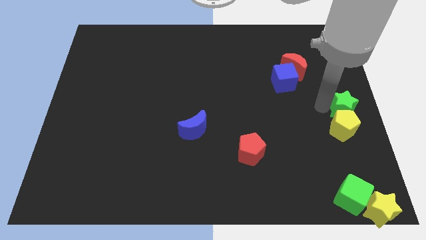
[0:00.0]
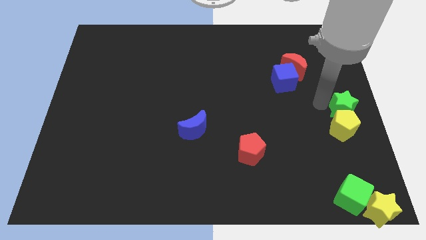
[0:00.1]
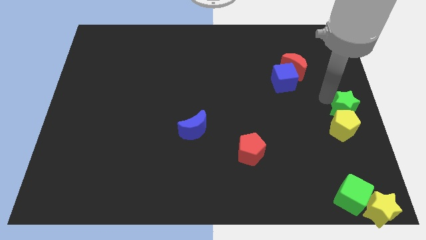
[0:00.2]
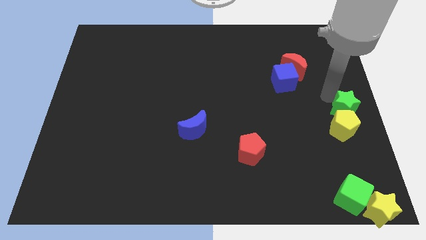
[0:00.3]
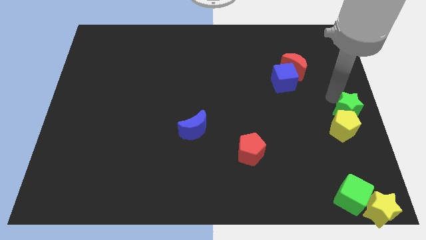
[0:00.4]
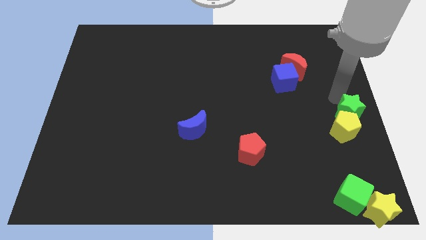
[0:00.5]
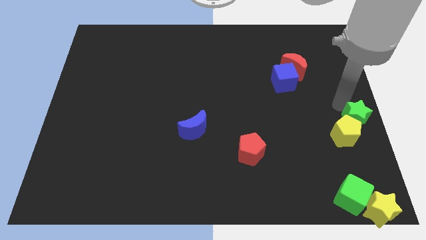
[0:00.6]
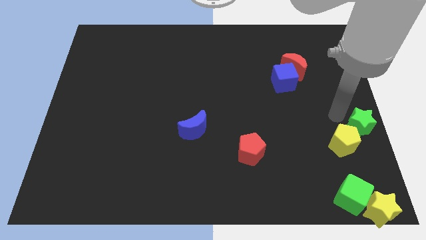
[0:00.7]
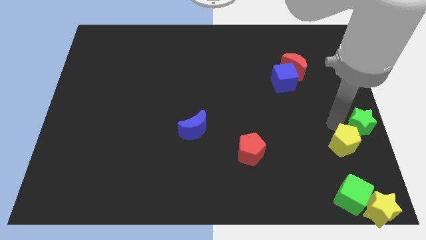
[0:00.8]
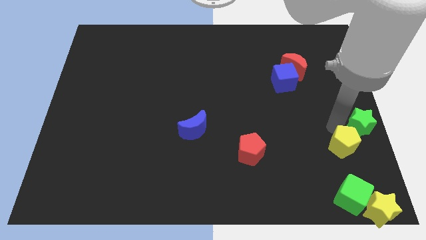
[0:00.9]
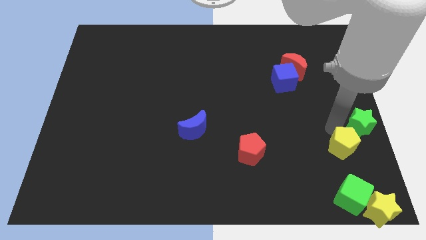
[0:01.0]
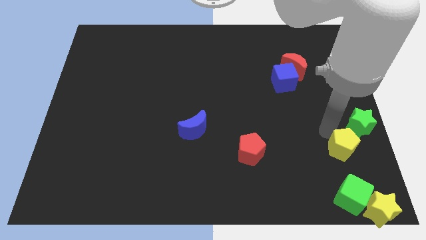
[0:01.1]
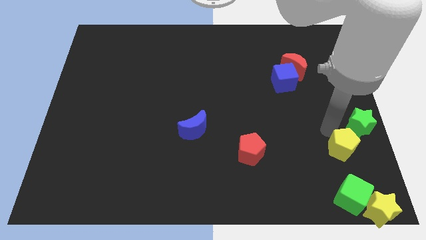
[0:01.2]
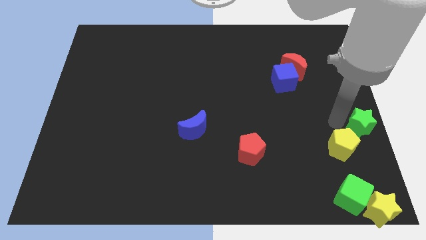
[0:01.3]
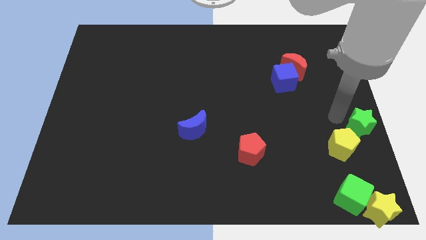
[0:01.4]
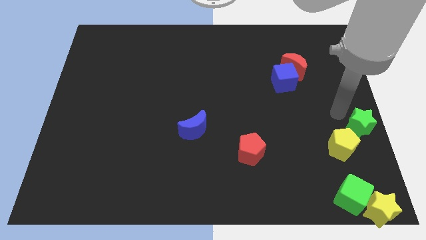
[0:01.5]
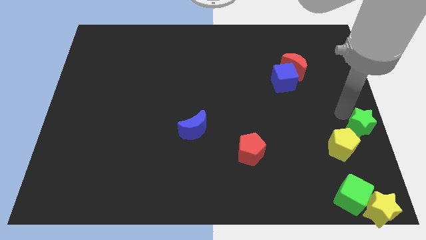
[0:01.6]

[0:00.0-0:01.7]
separate the yellow pentagon from the green star

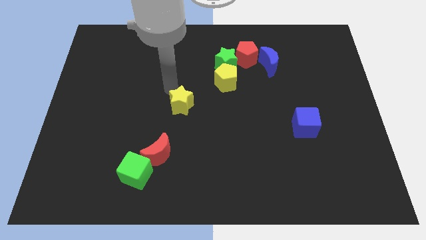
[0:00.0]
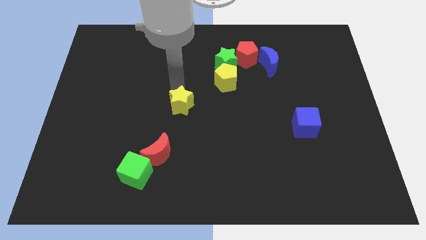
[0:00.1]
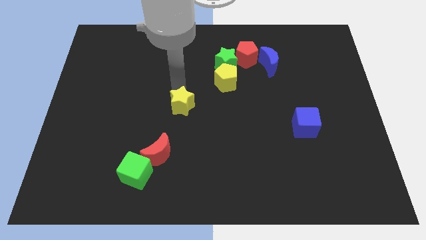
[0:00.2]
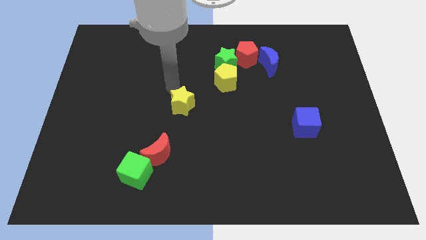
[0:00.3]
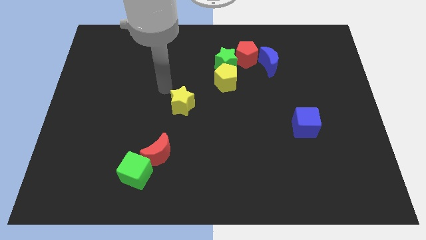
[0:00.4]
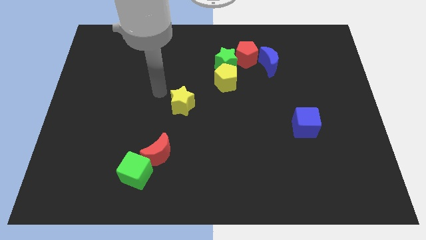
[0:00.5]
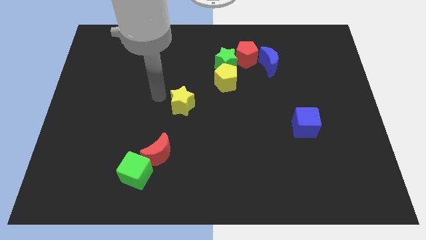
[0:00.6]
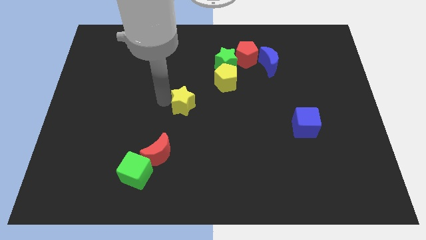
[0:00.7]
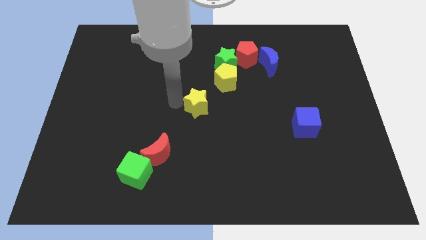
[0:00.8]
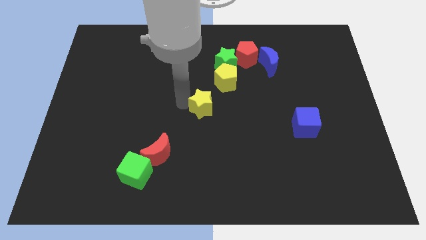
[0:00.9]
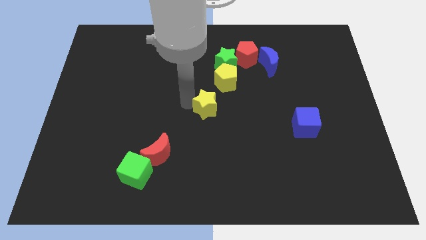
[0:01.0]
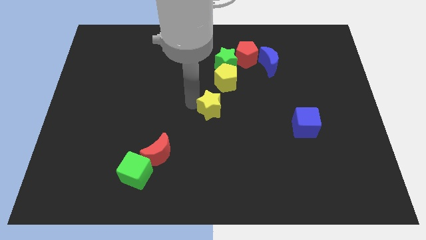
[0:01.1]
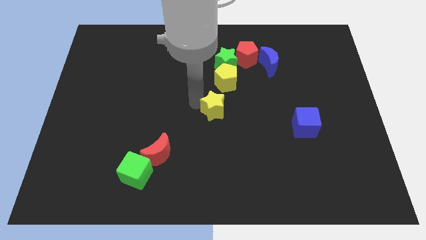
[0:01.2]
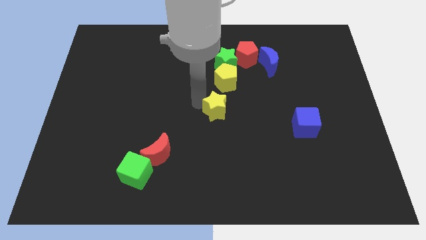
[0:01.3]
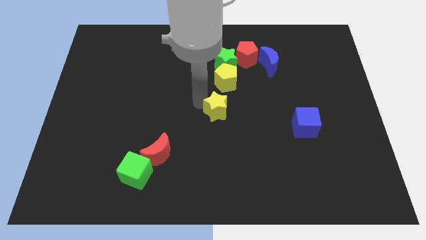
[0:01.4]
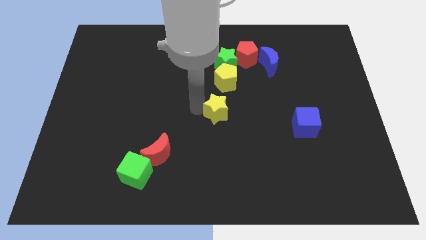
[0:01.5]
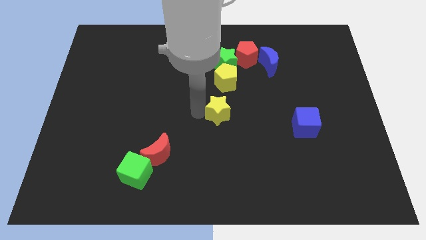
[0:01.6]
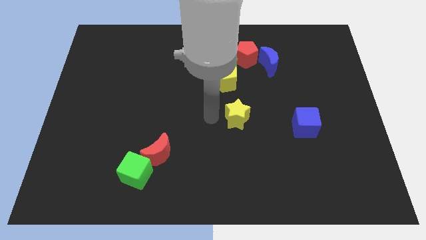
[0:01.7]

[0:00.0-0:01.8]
put the yellow star below the yellow pentagon

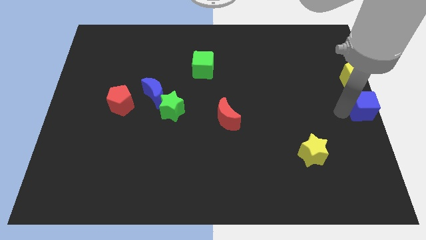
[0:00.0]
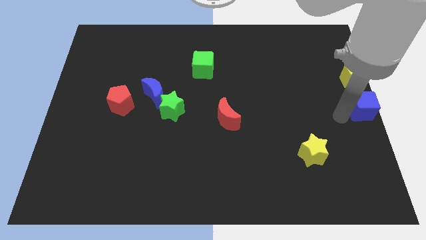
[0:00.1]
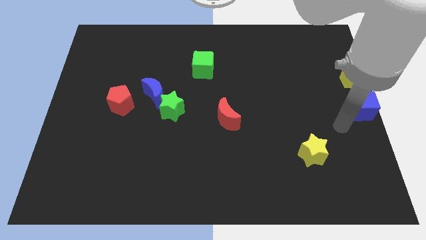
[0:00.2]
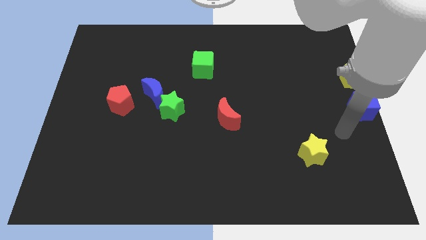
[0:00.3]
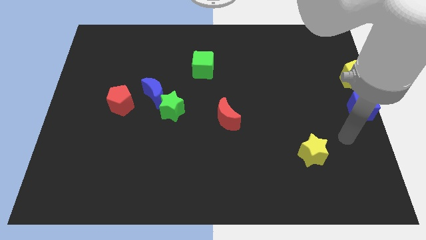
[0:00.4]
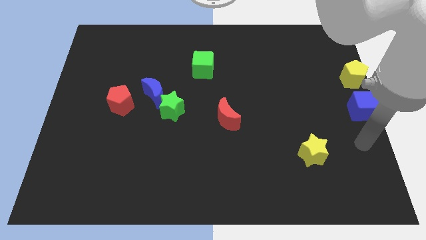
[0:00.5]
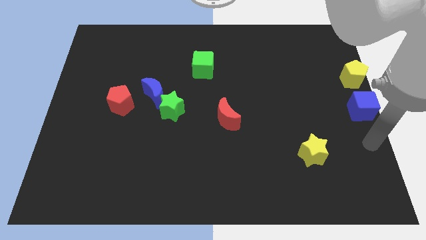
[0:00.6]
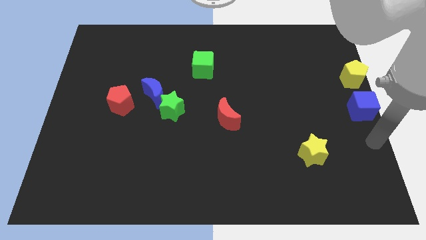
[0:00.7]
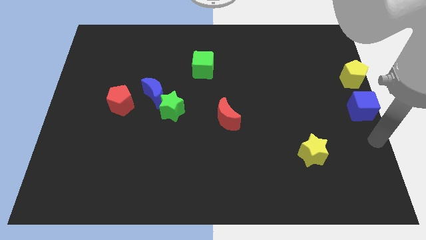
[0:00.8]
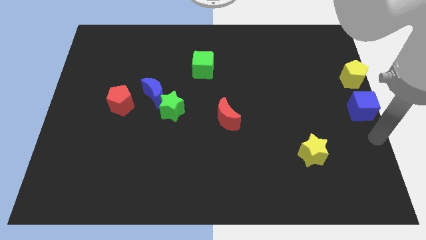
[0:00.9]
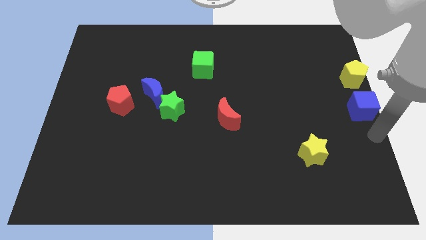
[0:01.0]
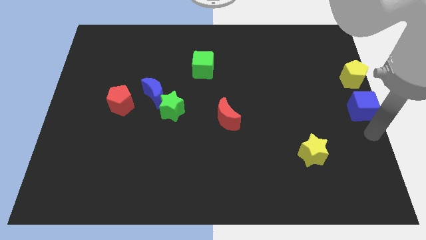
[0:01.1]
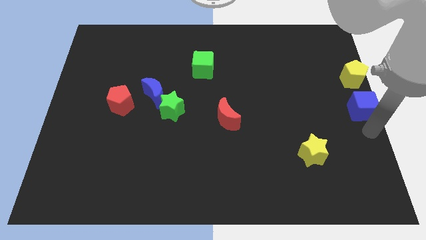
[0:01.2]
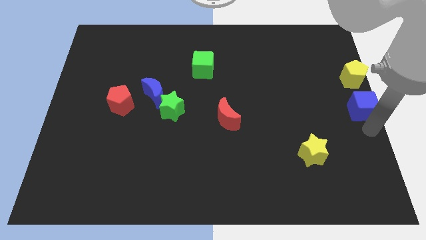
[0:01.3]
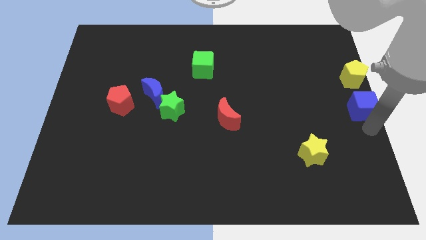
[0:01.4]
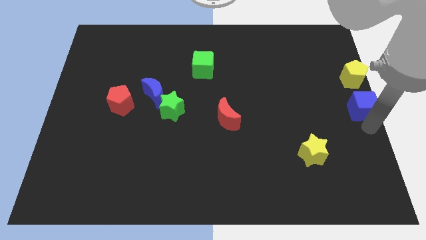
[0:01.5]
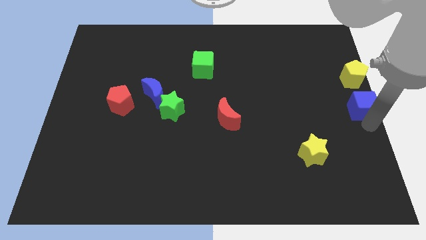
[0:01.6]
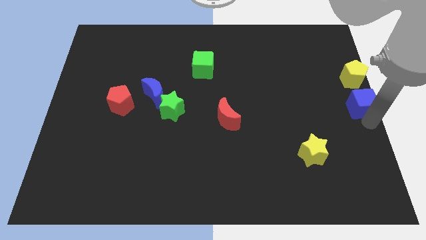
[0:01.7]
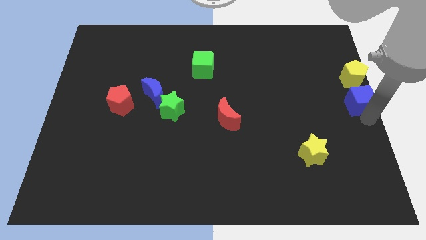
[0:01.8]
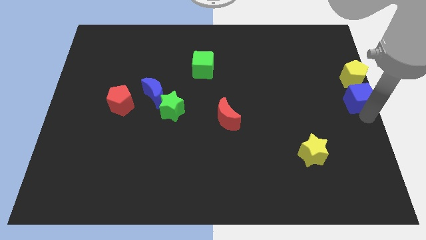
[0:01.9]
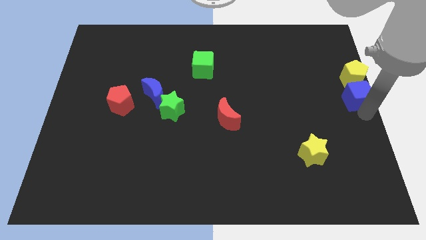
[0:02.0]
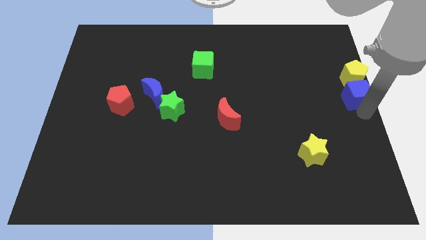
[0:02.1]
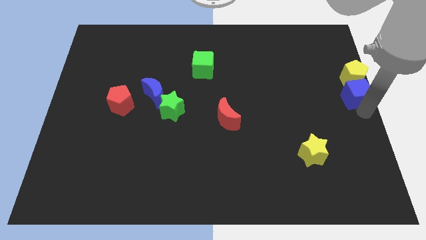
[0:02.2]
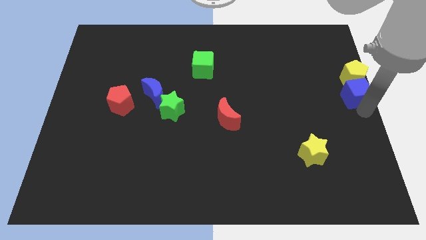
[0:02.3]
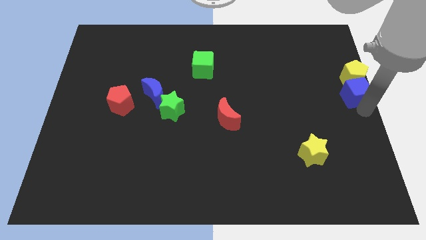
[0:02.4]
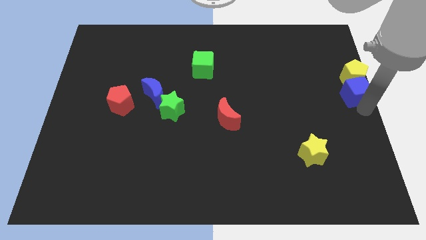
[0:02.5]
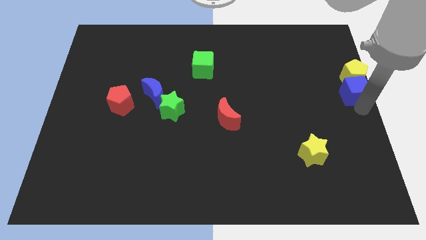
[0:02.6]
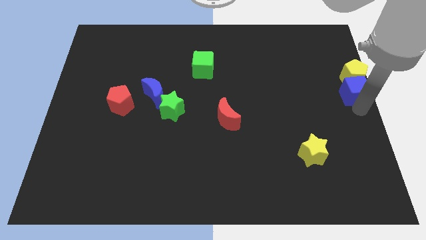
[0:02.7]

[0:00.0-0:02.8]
place blue cube below the yellow pentagon

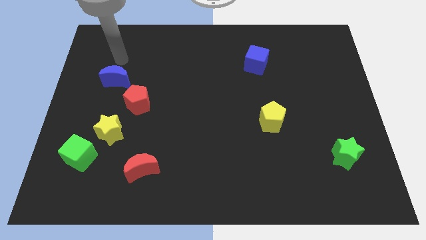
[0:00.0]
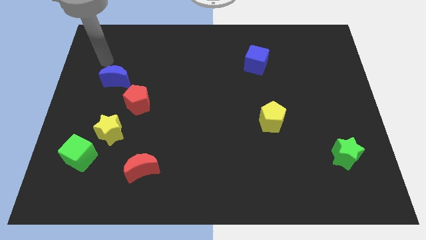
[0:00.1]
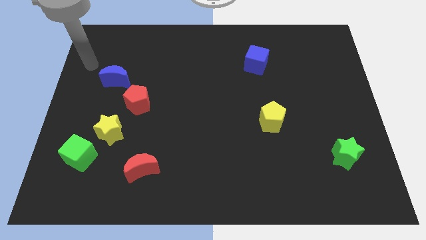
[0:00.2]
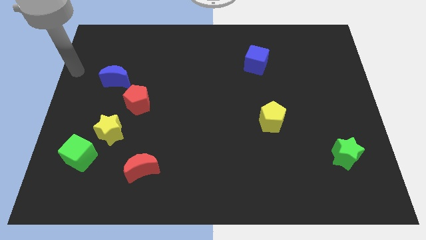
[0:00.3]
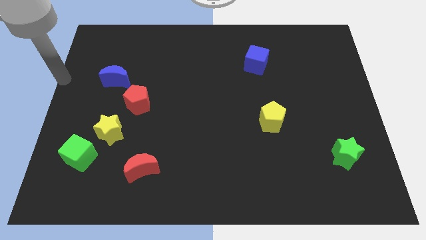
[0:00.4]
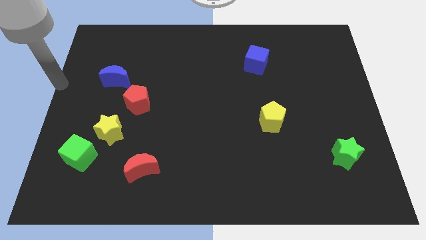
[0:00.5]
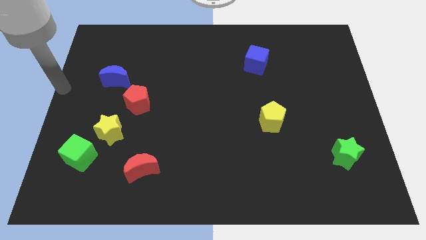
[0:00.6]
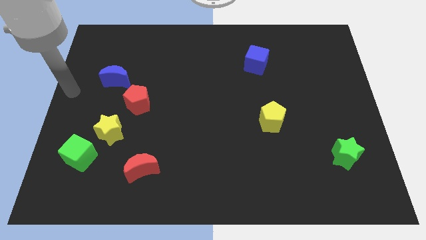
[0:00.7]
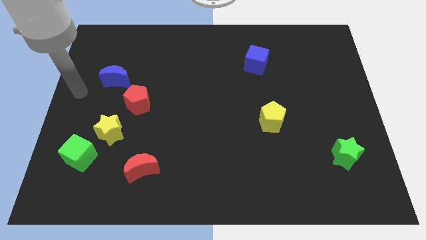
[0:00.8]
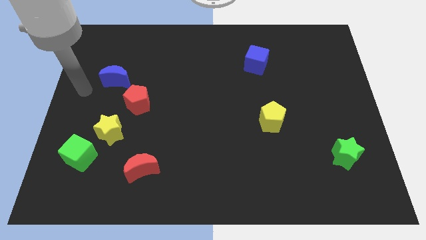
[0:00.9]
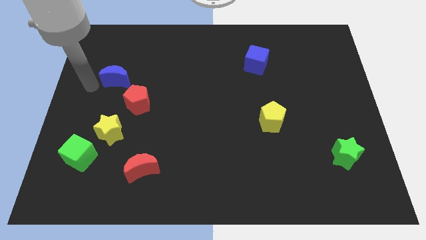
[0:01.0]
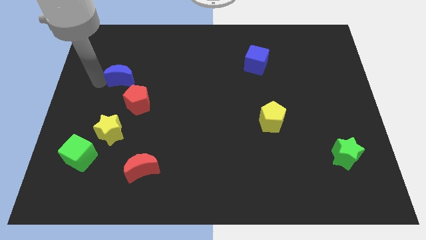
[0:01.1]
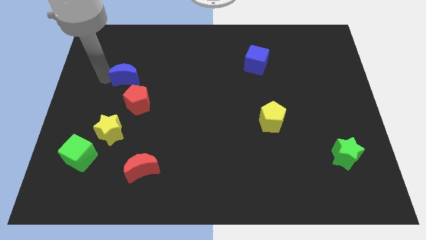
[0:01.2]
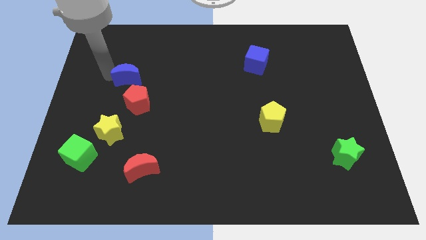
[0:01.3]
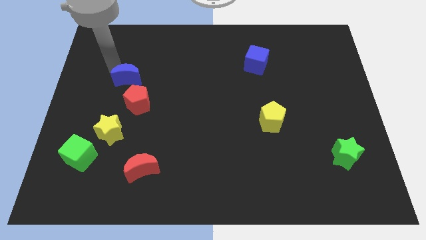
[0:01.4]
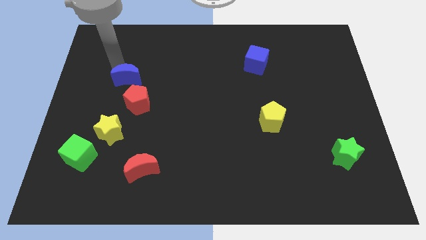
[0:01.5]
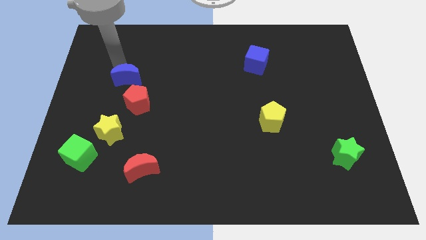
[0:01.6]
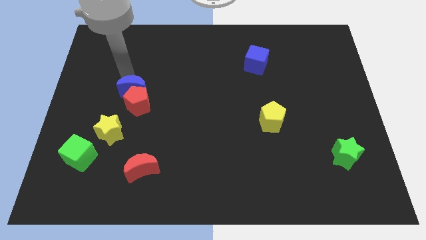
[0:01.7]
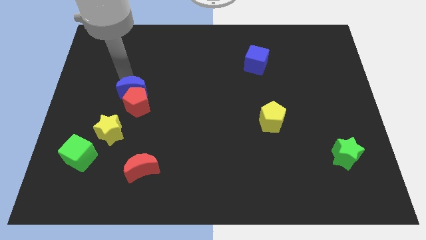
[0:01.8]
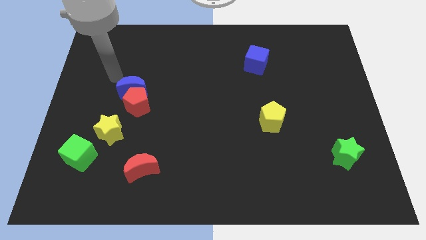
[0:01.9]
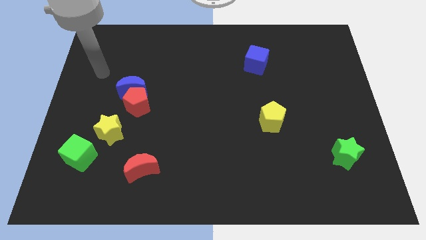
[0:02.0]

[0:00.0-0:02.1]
move the blue moon into the red pentagon

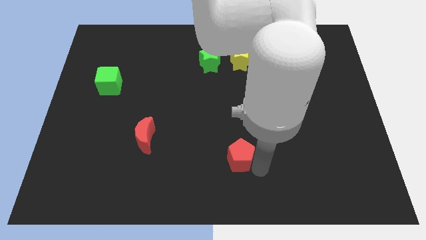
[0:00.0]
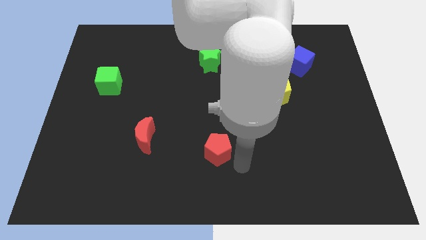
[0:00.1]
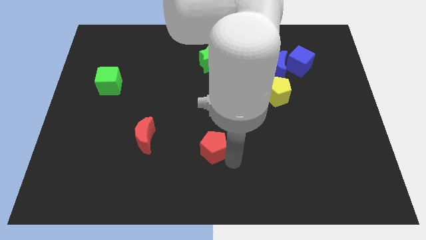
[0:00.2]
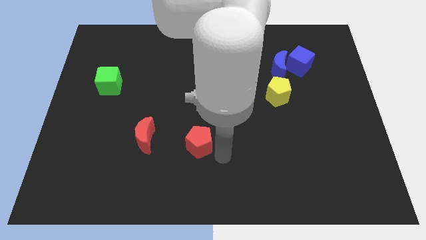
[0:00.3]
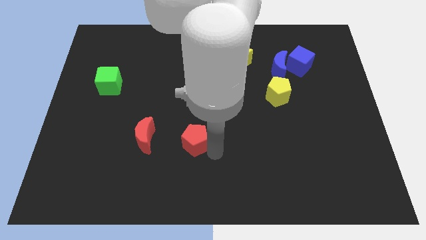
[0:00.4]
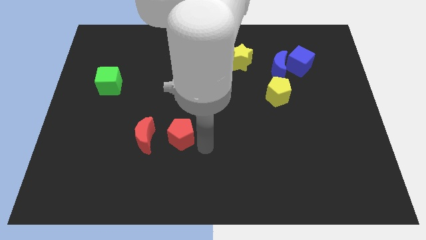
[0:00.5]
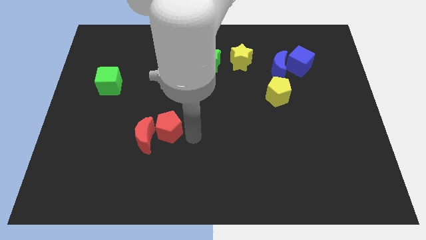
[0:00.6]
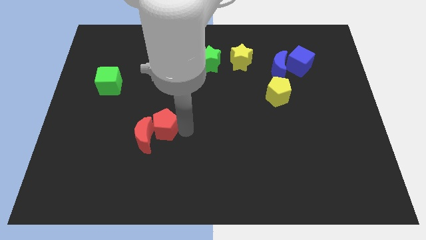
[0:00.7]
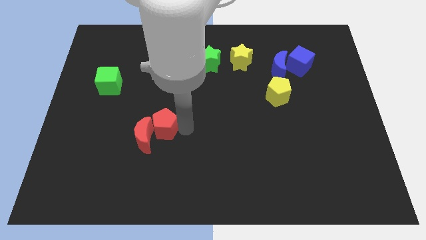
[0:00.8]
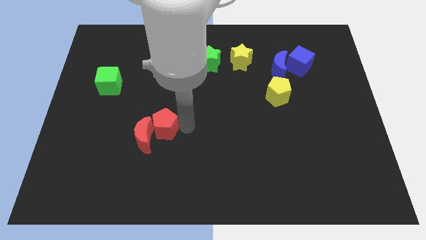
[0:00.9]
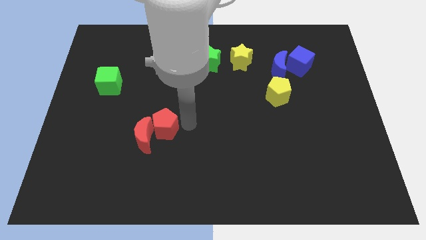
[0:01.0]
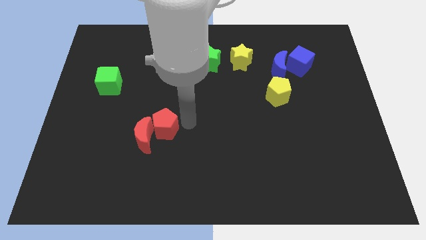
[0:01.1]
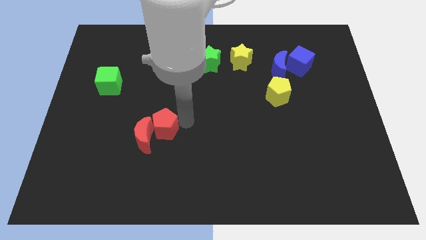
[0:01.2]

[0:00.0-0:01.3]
move the red pentagon to the right of the red moon
